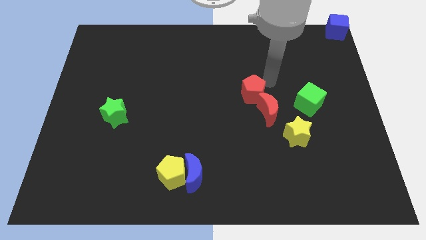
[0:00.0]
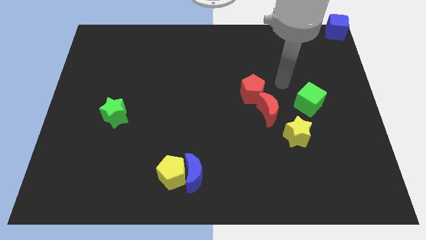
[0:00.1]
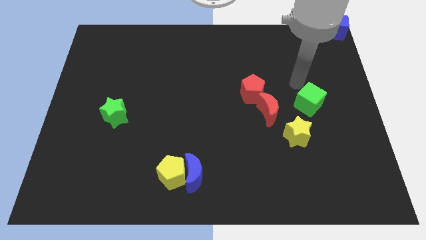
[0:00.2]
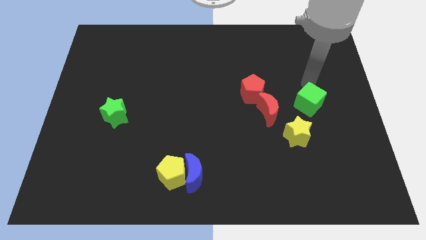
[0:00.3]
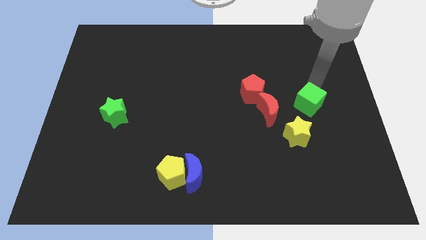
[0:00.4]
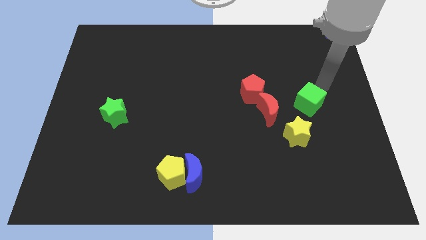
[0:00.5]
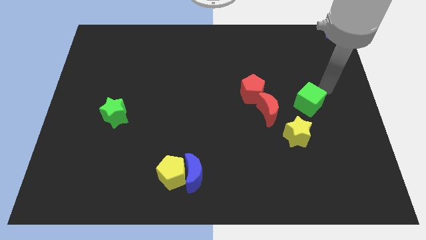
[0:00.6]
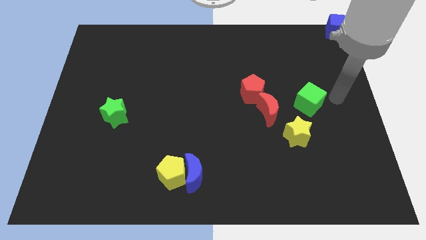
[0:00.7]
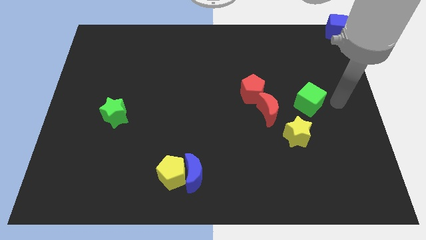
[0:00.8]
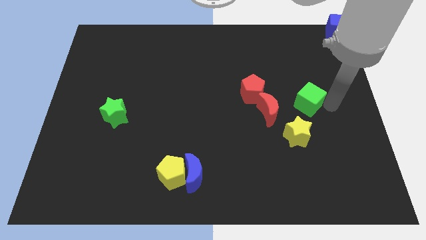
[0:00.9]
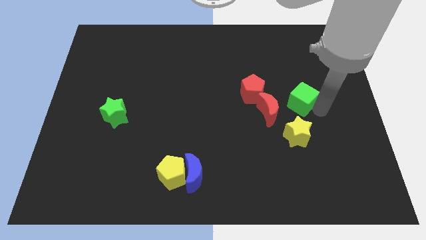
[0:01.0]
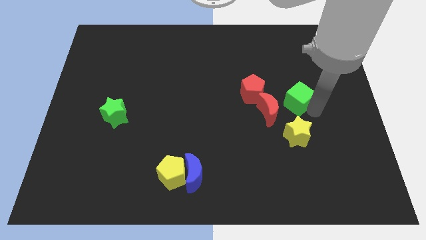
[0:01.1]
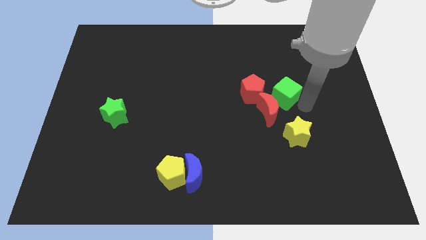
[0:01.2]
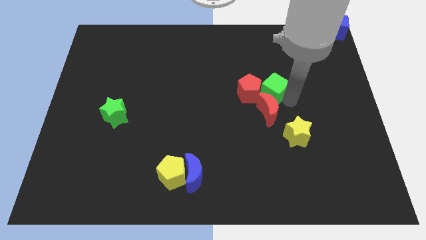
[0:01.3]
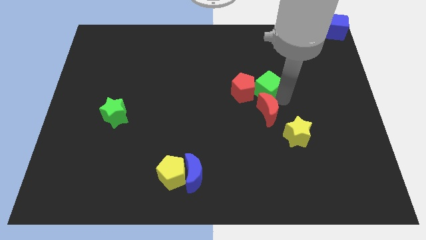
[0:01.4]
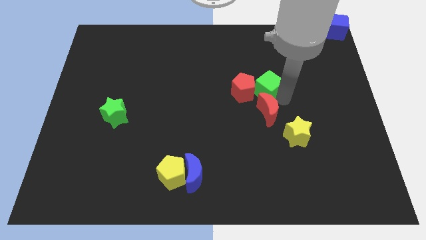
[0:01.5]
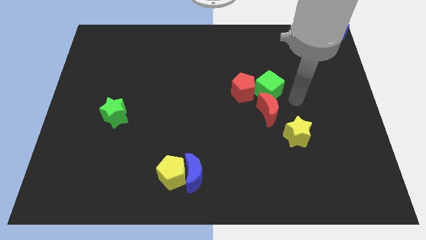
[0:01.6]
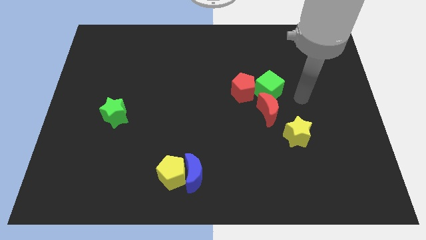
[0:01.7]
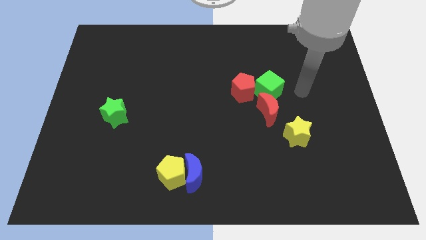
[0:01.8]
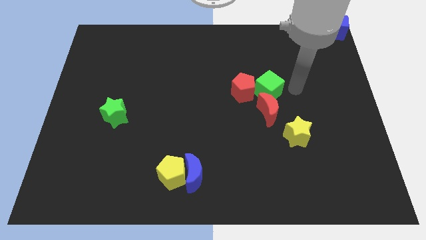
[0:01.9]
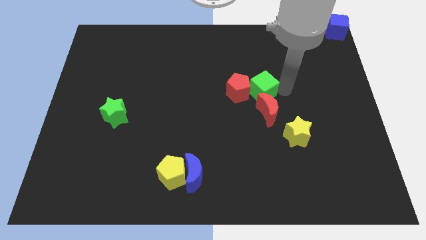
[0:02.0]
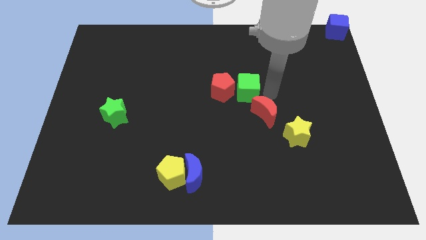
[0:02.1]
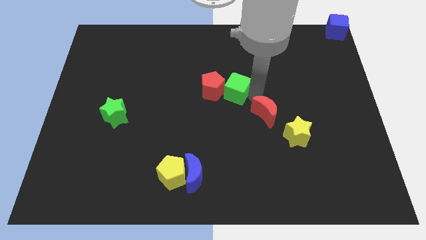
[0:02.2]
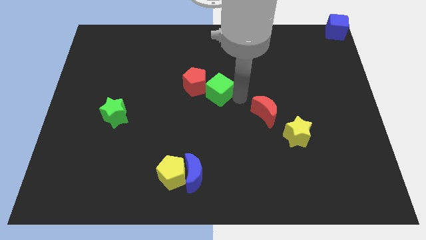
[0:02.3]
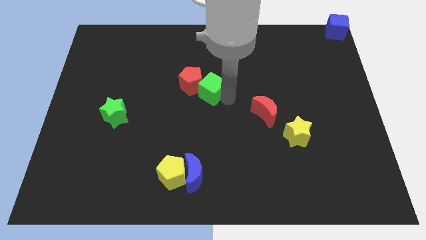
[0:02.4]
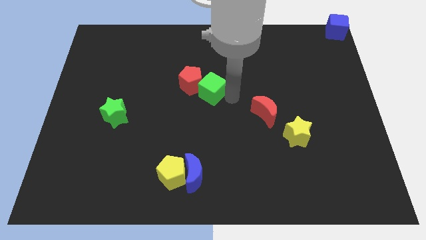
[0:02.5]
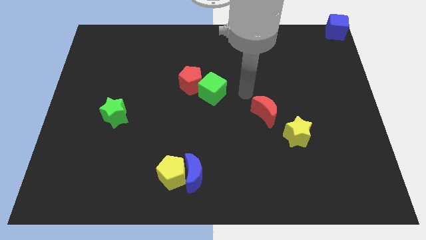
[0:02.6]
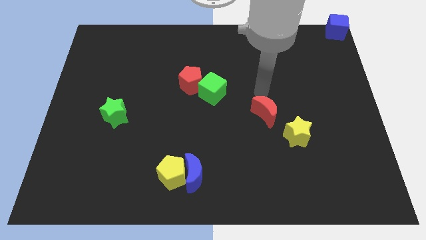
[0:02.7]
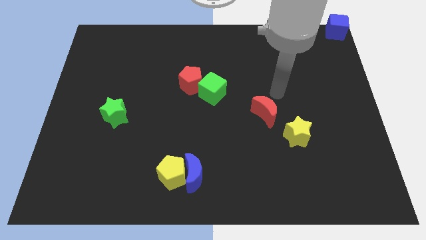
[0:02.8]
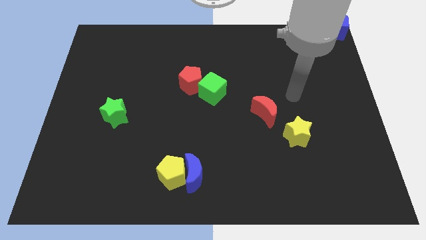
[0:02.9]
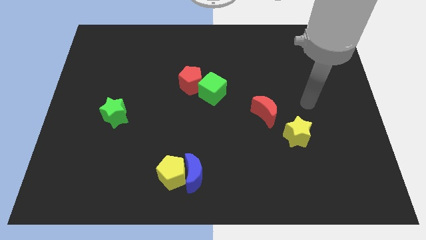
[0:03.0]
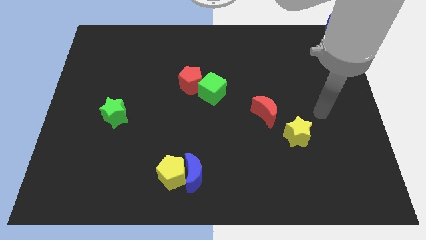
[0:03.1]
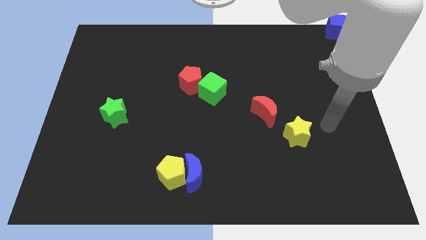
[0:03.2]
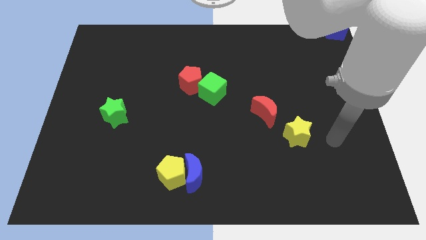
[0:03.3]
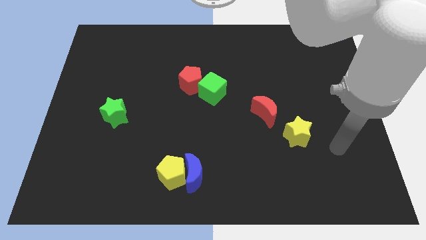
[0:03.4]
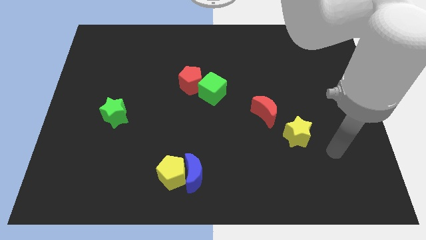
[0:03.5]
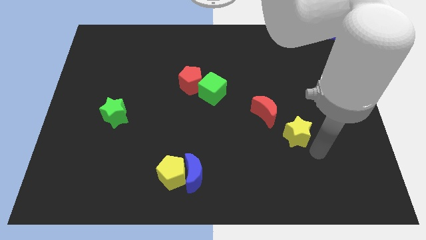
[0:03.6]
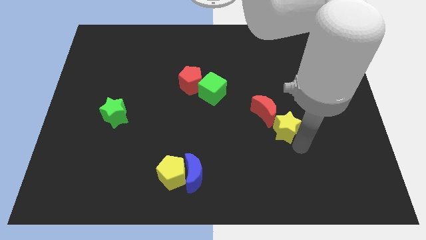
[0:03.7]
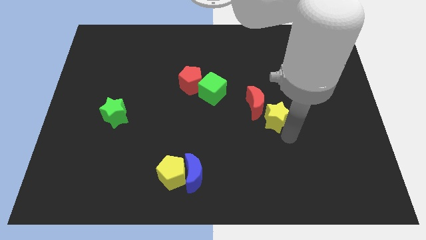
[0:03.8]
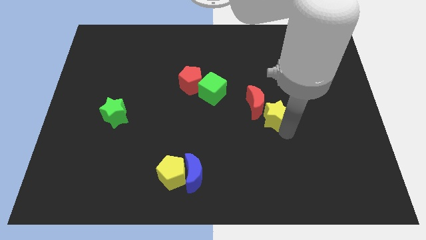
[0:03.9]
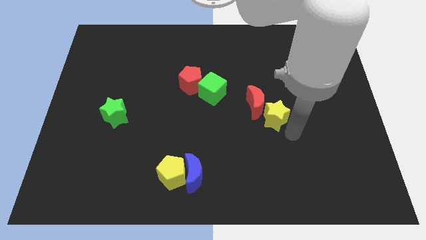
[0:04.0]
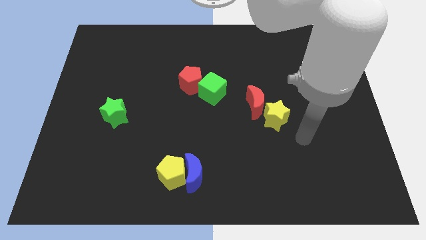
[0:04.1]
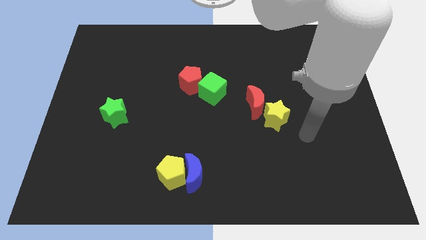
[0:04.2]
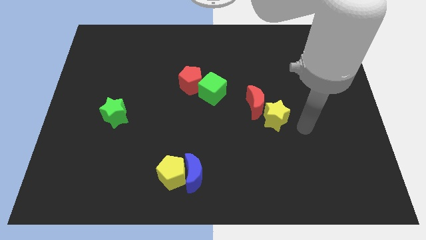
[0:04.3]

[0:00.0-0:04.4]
place the green cube at the center

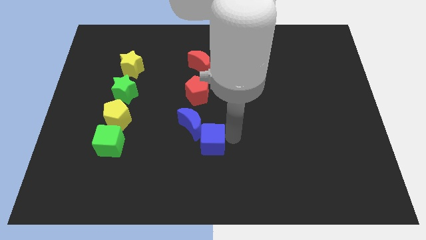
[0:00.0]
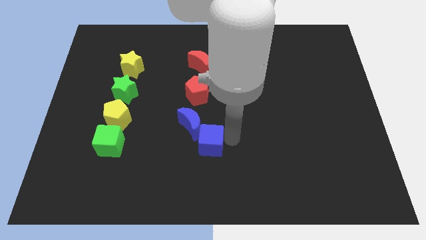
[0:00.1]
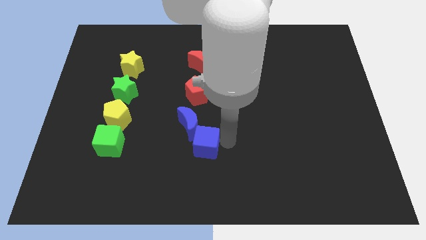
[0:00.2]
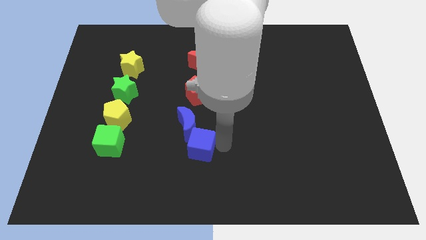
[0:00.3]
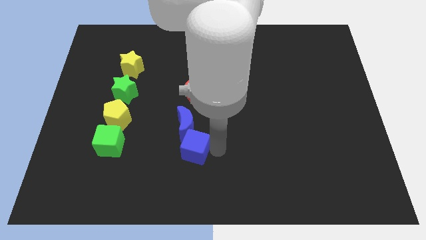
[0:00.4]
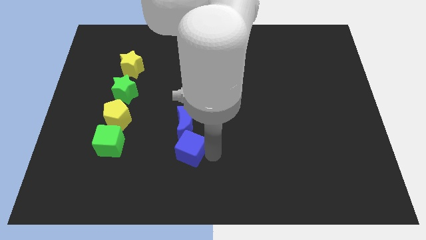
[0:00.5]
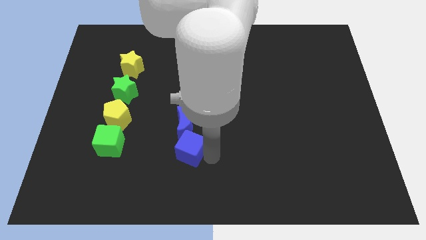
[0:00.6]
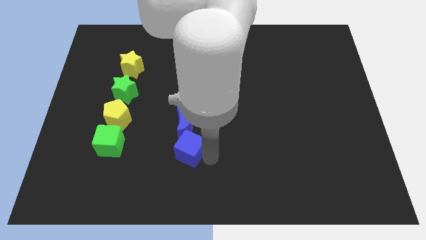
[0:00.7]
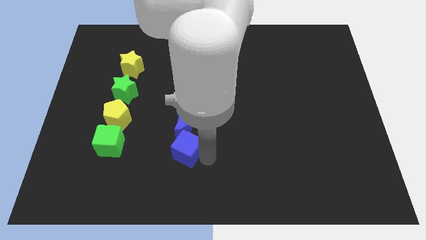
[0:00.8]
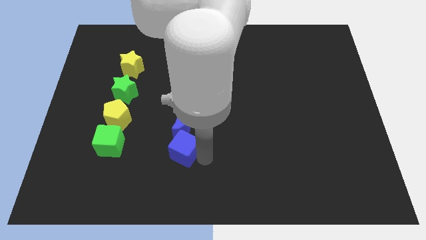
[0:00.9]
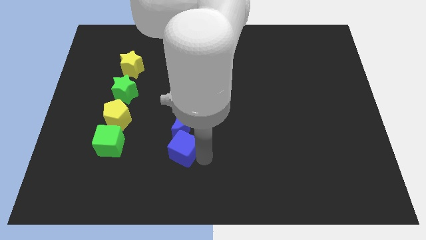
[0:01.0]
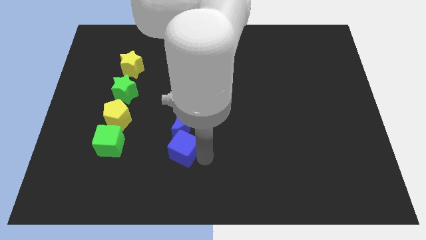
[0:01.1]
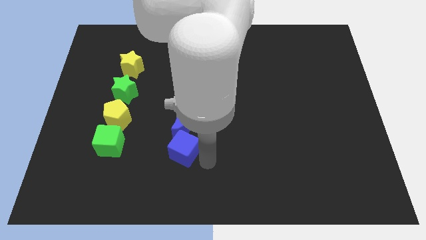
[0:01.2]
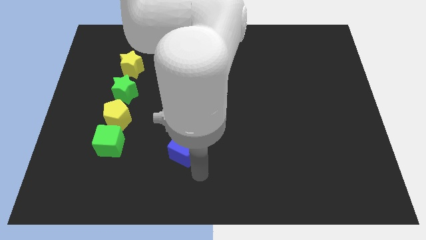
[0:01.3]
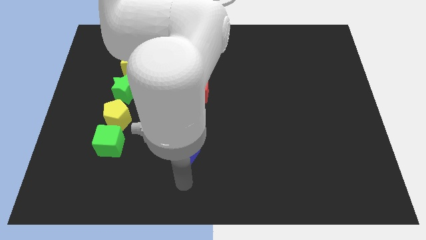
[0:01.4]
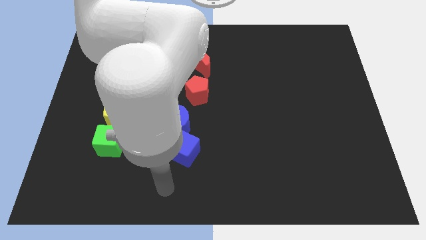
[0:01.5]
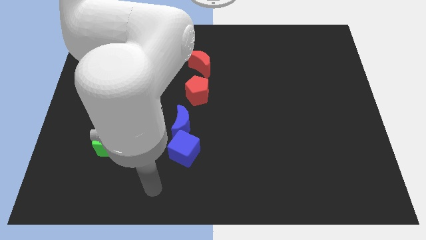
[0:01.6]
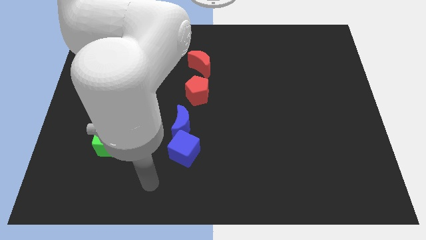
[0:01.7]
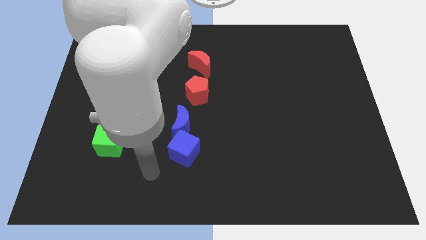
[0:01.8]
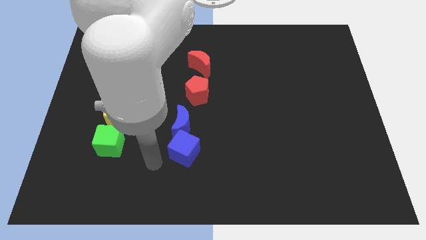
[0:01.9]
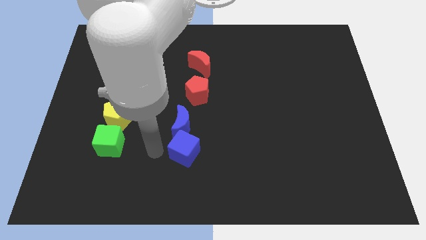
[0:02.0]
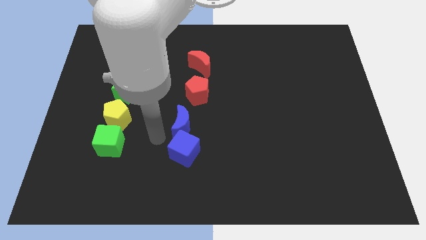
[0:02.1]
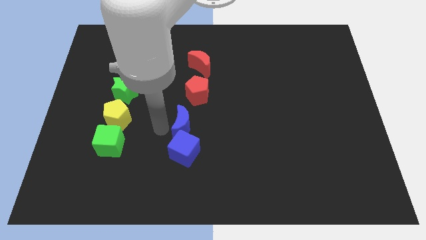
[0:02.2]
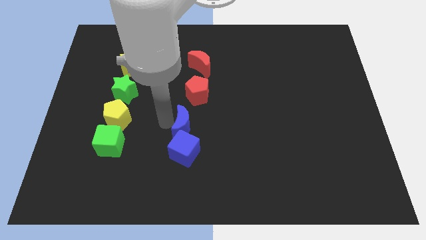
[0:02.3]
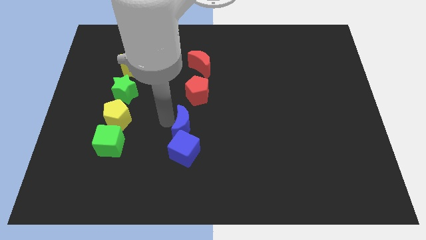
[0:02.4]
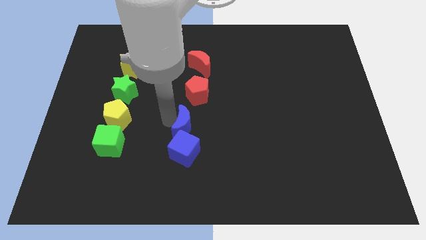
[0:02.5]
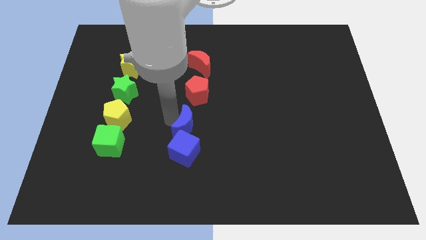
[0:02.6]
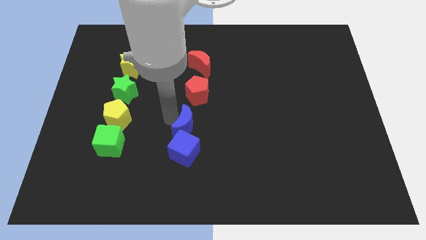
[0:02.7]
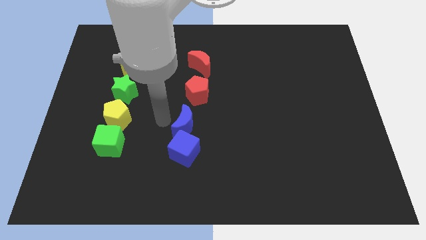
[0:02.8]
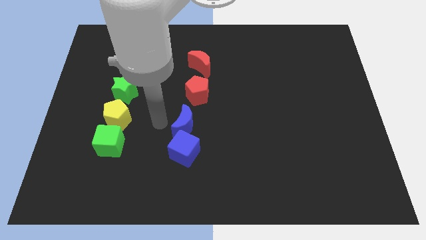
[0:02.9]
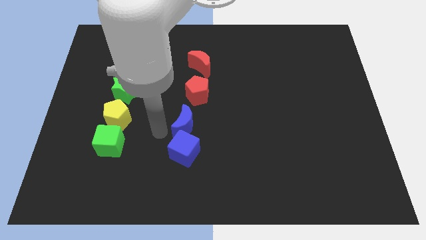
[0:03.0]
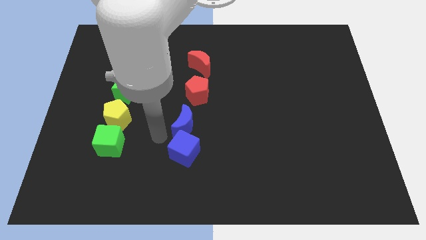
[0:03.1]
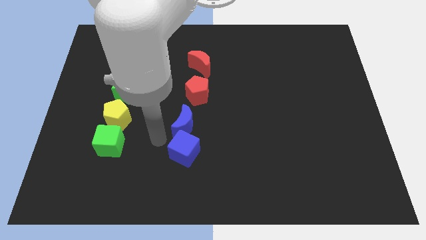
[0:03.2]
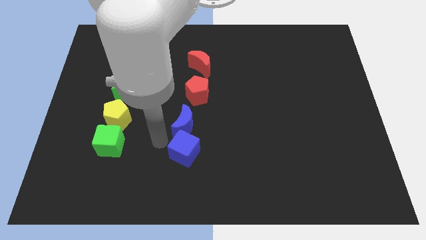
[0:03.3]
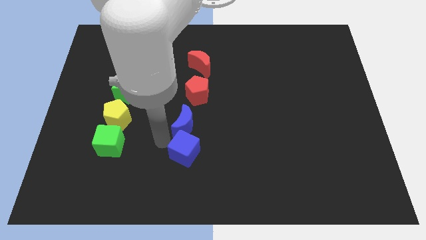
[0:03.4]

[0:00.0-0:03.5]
place the blue cube vertically below the blue moon

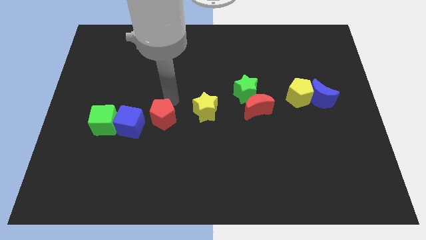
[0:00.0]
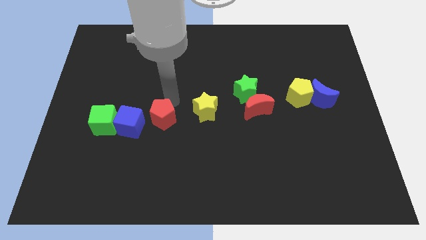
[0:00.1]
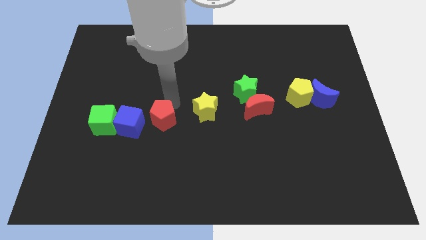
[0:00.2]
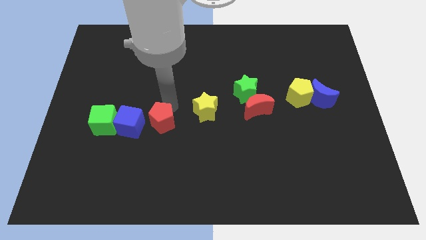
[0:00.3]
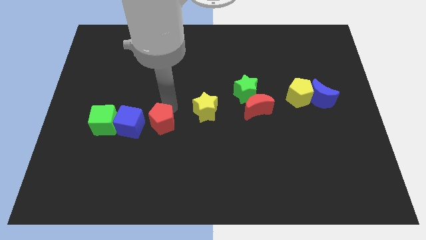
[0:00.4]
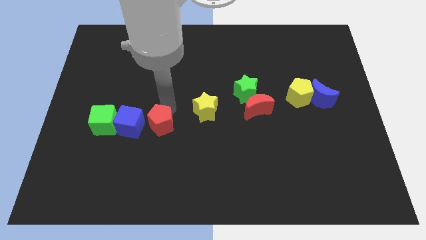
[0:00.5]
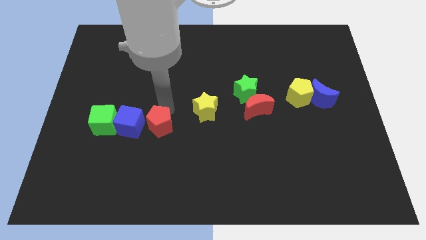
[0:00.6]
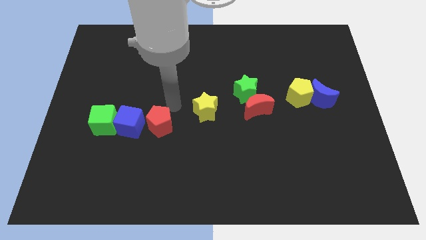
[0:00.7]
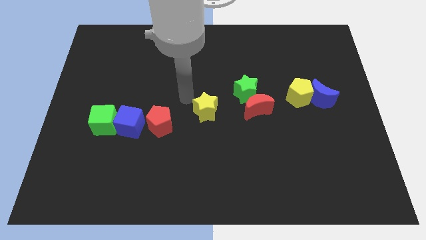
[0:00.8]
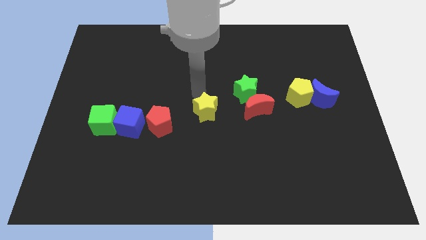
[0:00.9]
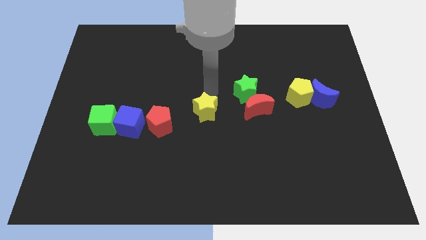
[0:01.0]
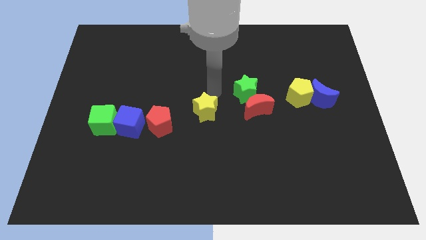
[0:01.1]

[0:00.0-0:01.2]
push the red pentagon to the right of the blue cube
